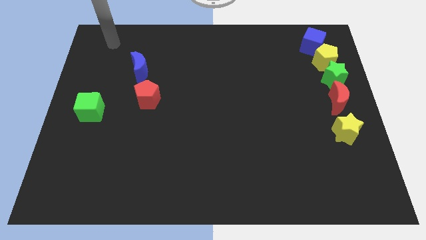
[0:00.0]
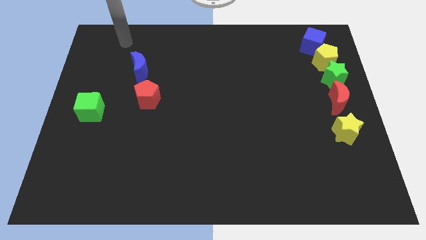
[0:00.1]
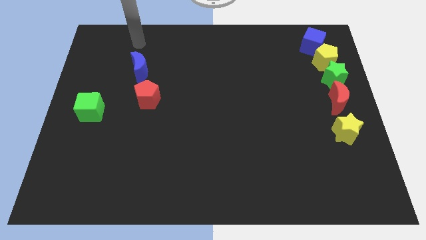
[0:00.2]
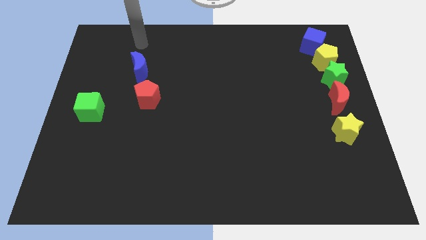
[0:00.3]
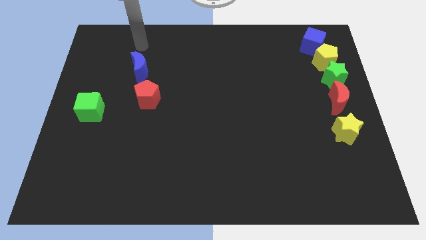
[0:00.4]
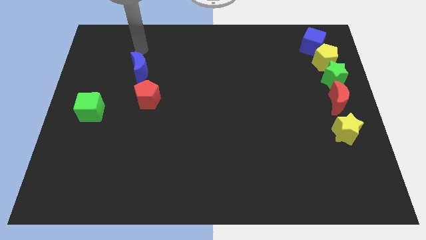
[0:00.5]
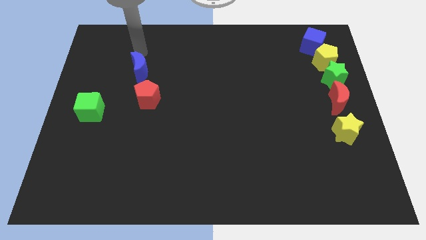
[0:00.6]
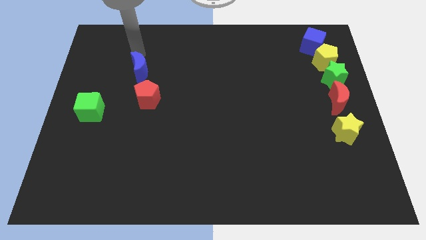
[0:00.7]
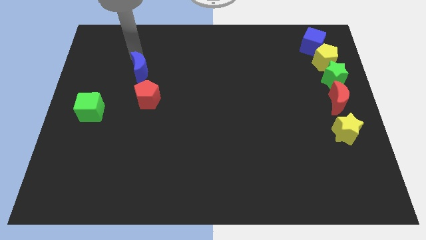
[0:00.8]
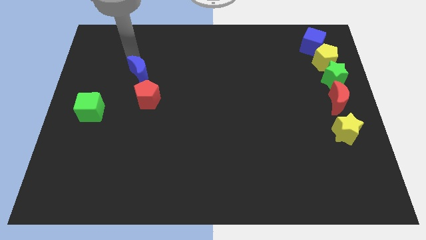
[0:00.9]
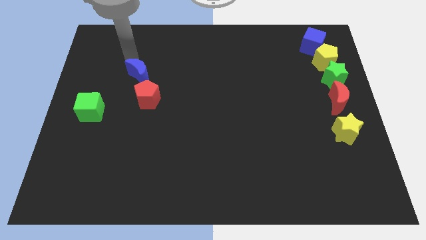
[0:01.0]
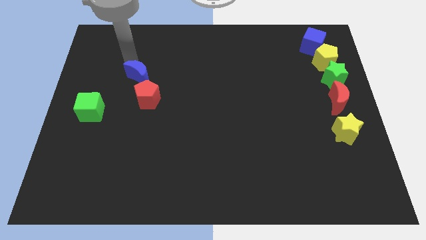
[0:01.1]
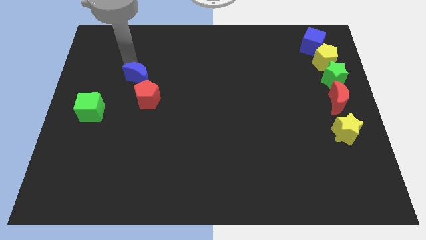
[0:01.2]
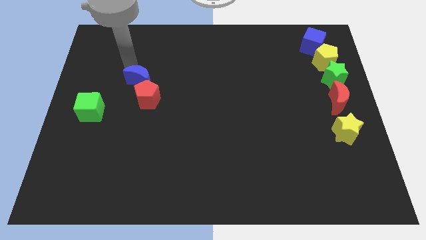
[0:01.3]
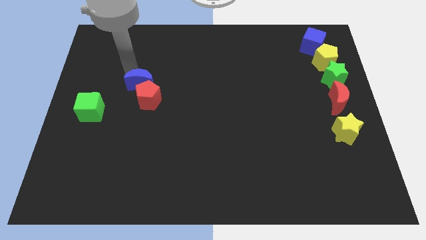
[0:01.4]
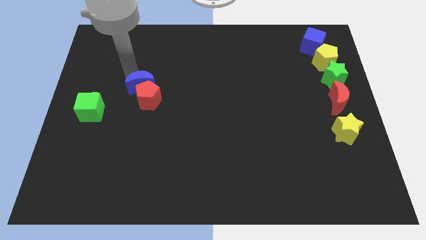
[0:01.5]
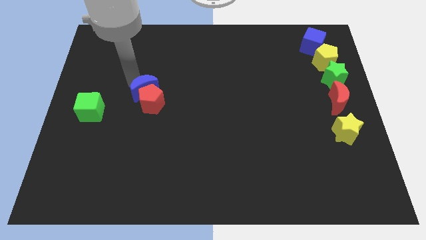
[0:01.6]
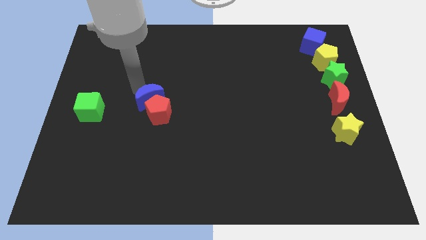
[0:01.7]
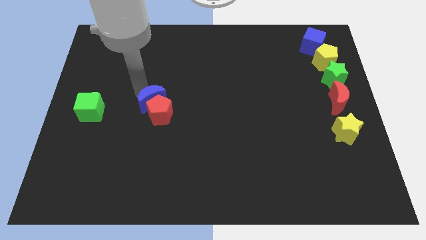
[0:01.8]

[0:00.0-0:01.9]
push the blue moon into the red pentagon

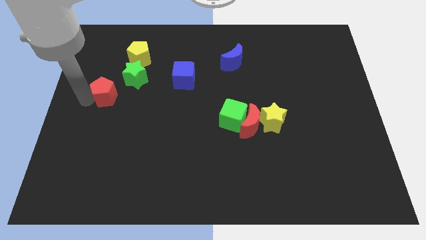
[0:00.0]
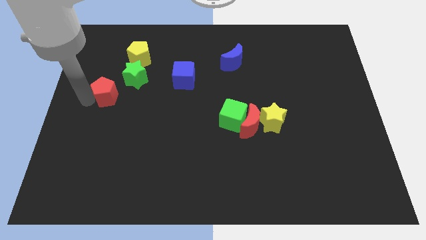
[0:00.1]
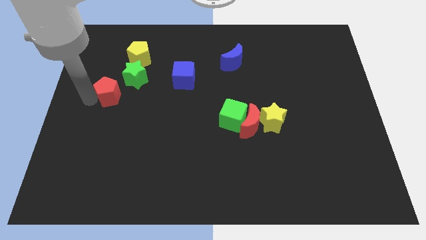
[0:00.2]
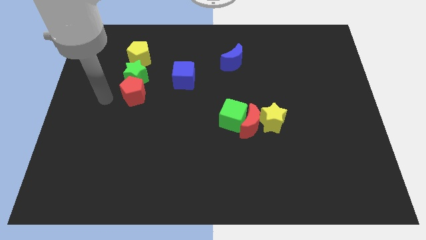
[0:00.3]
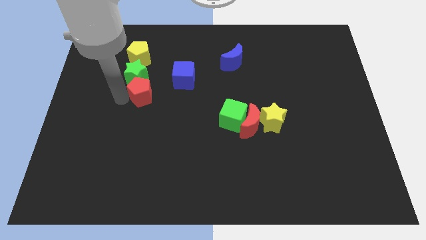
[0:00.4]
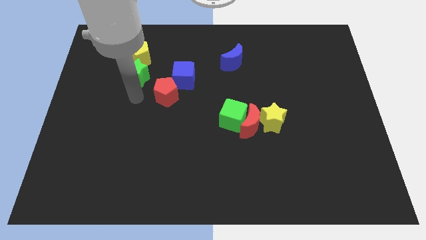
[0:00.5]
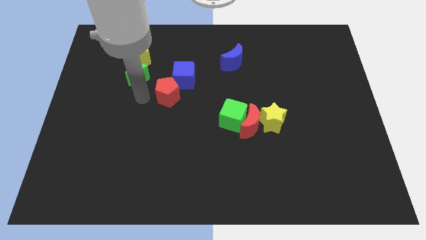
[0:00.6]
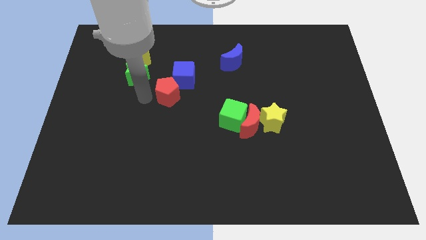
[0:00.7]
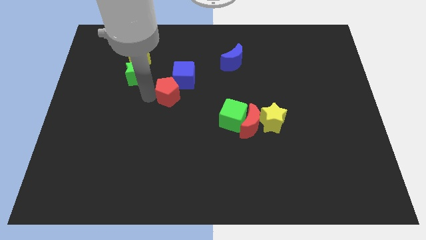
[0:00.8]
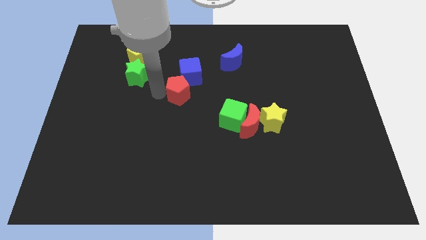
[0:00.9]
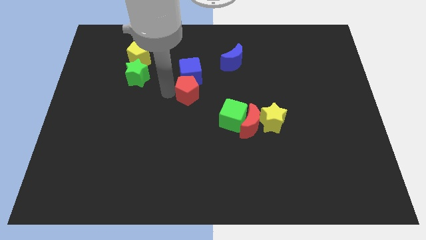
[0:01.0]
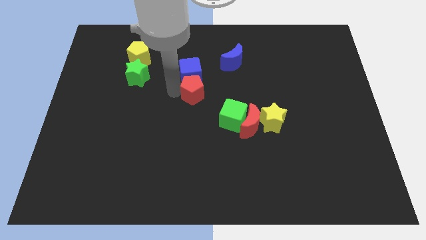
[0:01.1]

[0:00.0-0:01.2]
slide the red pentagon into the bottom of the blue cube

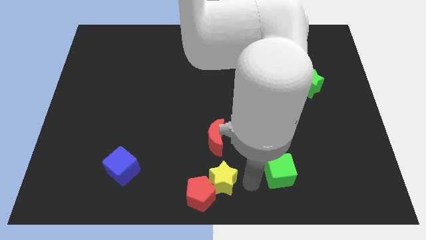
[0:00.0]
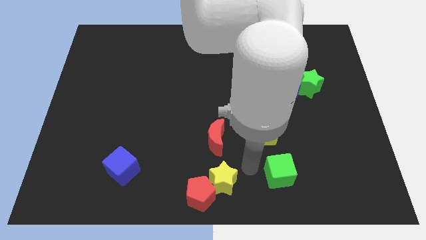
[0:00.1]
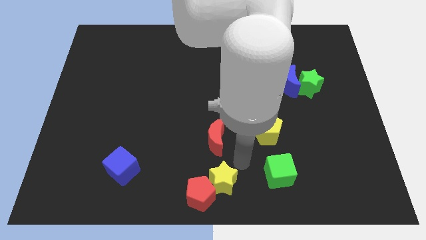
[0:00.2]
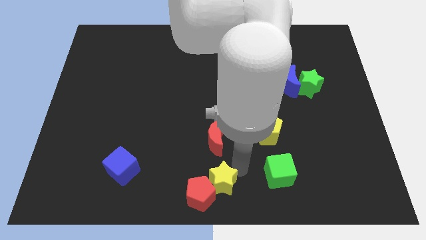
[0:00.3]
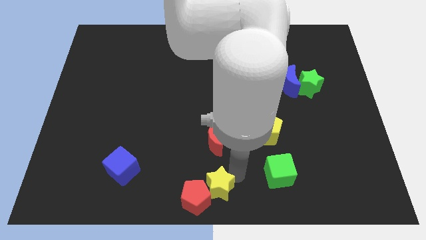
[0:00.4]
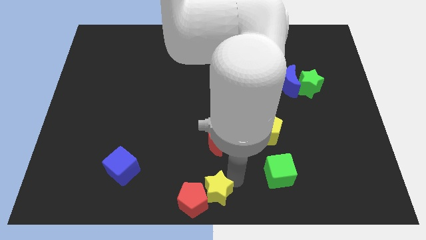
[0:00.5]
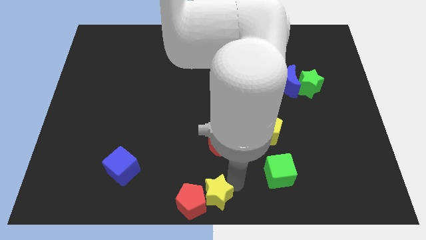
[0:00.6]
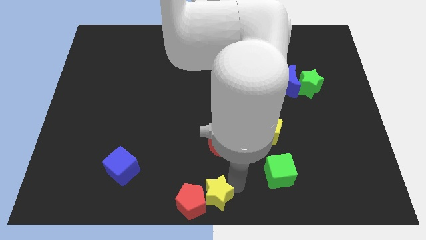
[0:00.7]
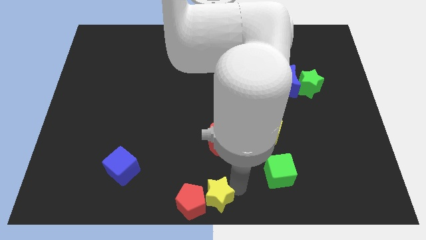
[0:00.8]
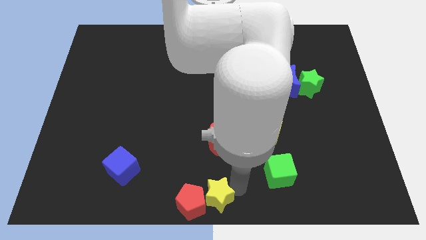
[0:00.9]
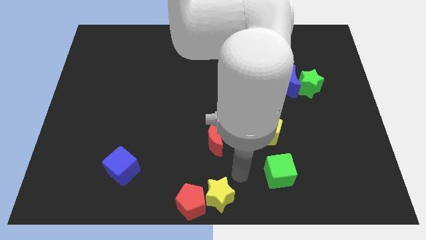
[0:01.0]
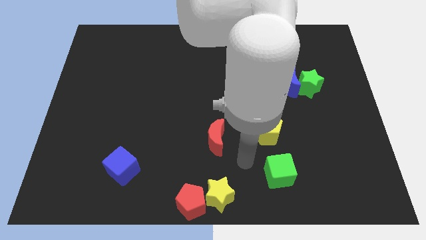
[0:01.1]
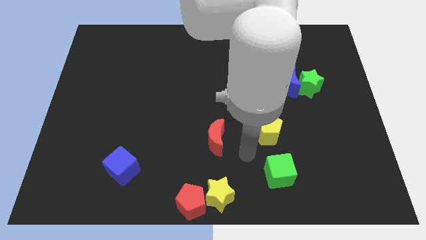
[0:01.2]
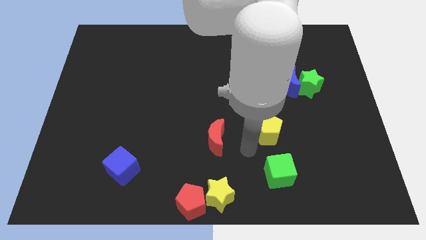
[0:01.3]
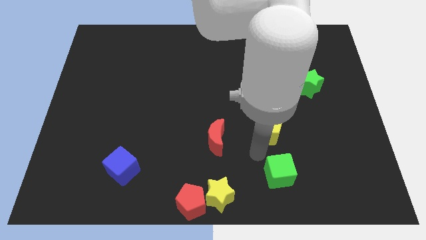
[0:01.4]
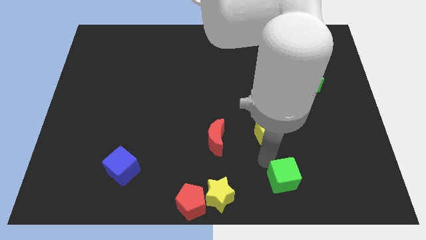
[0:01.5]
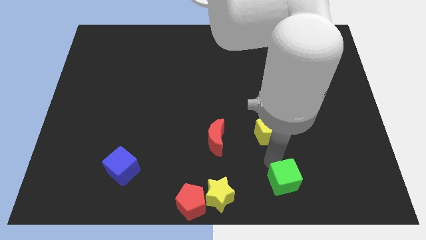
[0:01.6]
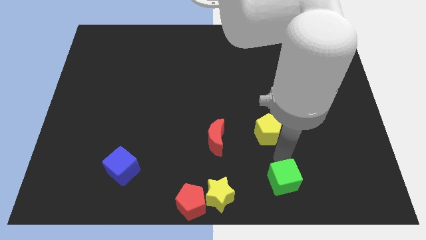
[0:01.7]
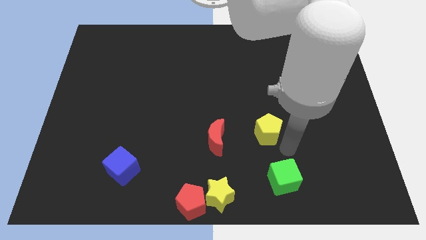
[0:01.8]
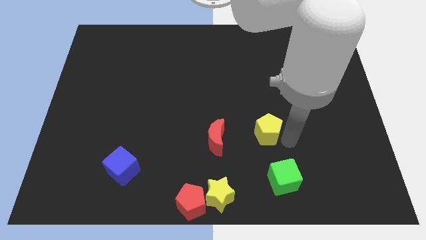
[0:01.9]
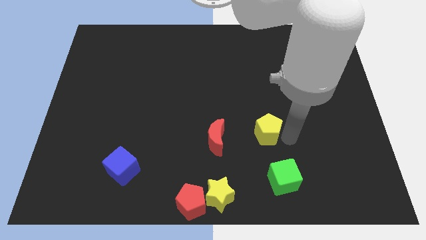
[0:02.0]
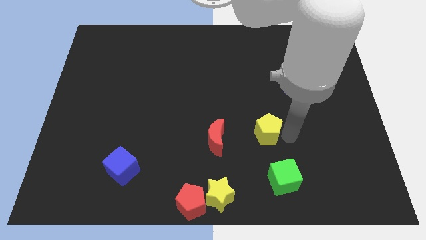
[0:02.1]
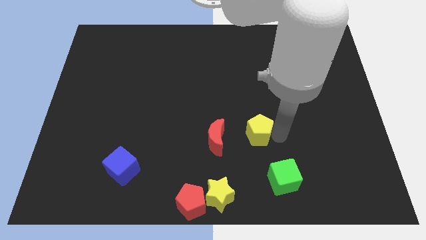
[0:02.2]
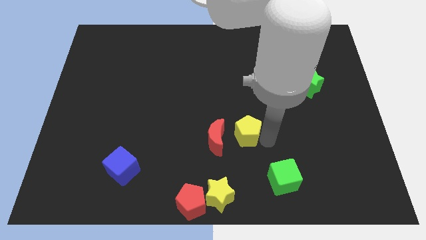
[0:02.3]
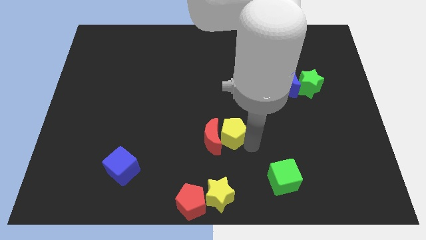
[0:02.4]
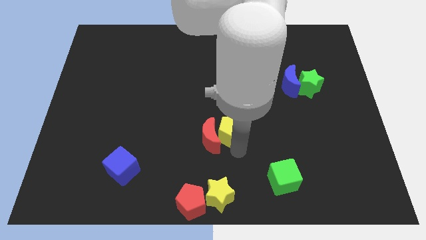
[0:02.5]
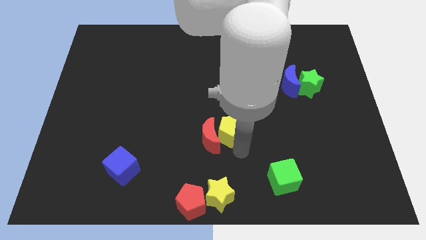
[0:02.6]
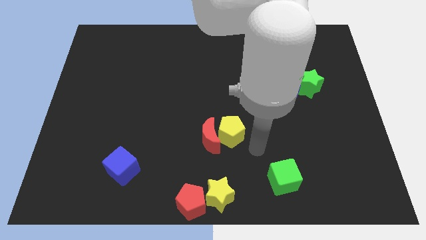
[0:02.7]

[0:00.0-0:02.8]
place yellow pentagon to the right red moon

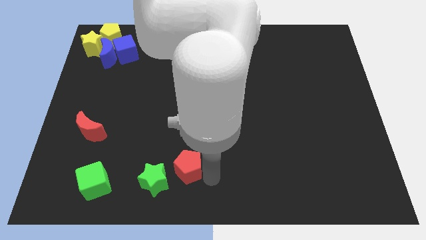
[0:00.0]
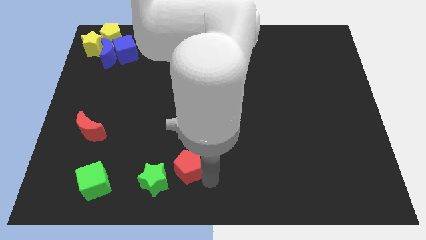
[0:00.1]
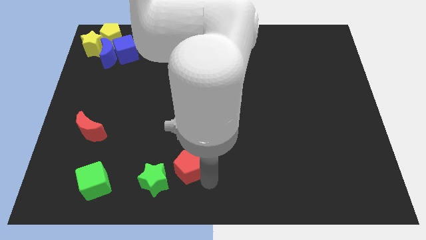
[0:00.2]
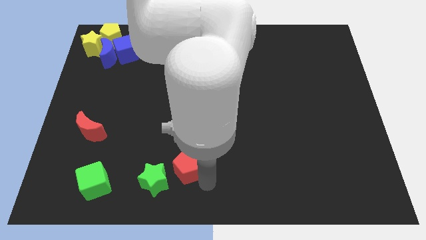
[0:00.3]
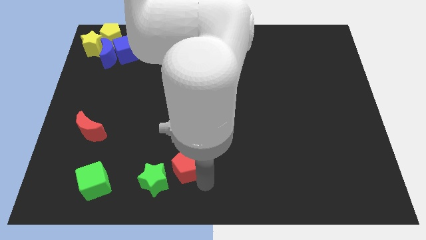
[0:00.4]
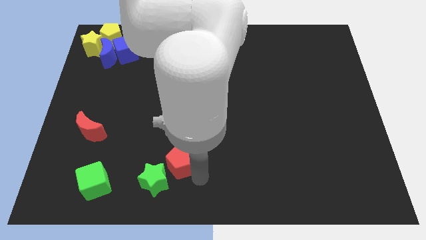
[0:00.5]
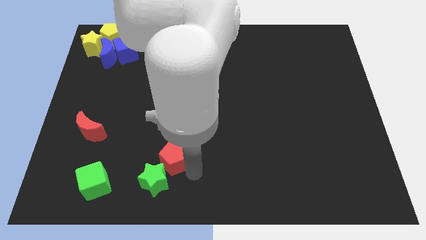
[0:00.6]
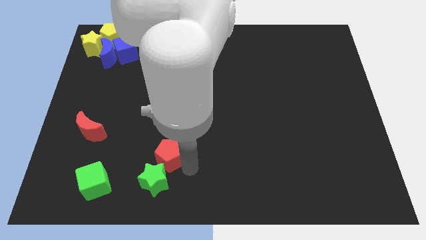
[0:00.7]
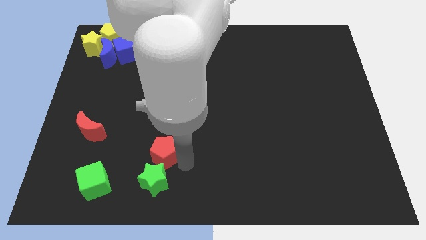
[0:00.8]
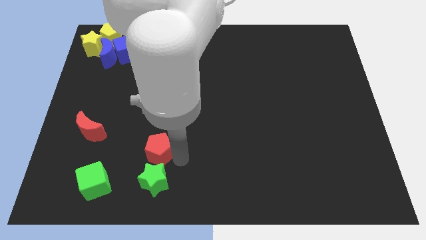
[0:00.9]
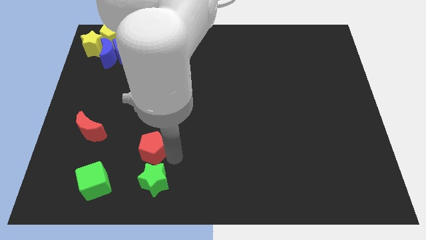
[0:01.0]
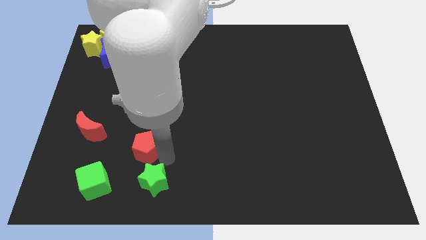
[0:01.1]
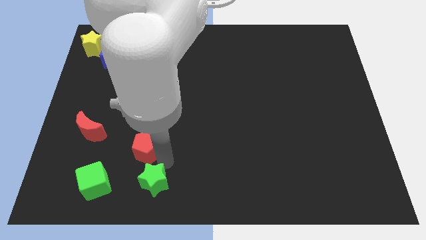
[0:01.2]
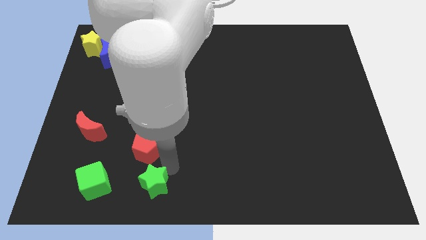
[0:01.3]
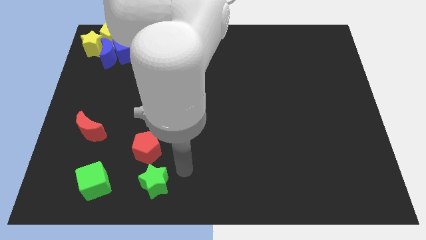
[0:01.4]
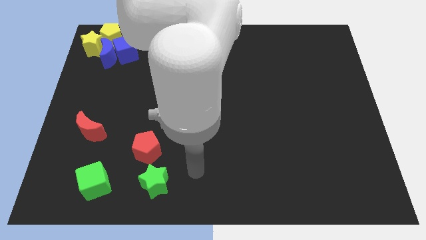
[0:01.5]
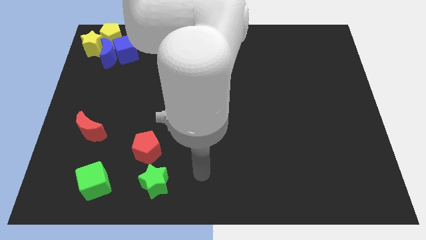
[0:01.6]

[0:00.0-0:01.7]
put the red pentagon above the green star

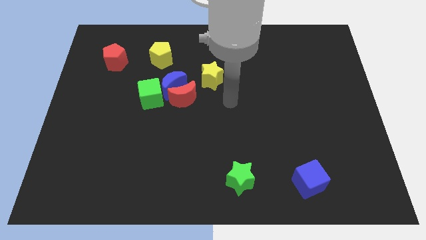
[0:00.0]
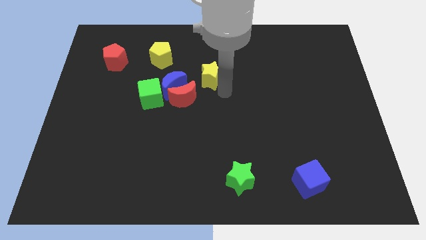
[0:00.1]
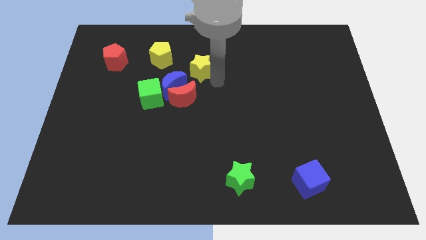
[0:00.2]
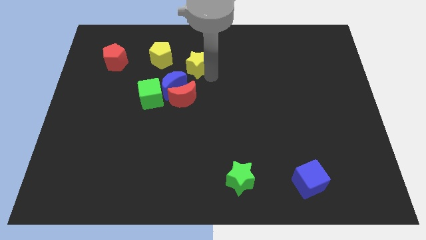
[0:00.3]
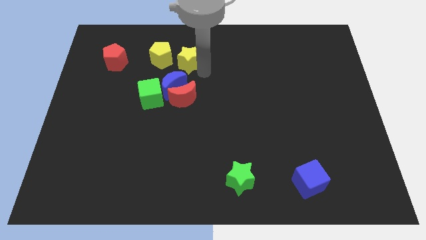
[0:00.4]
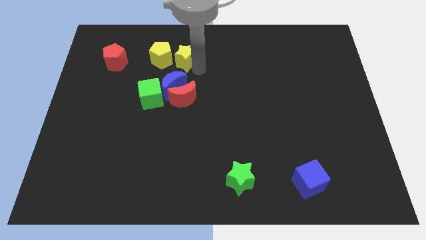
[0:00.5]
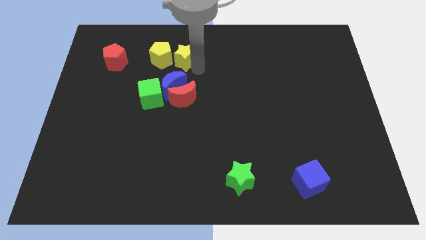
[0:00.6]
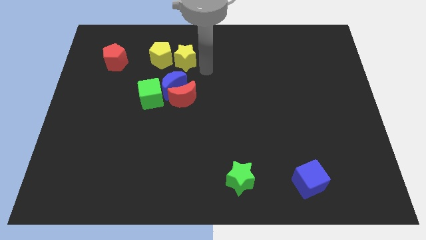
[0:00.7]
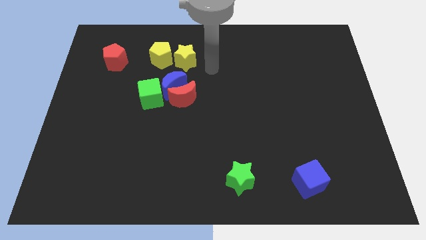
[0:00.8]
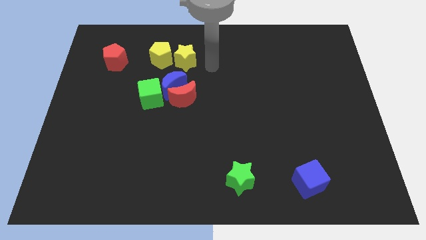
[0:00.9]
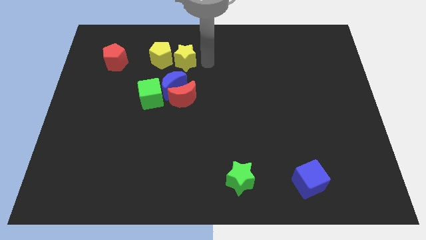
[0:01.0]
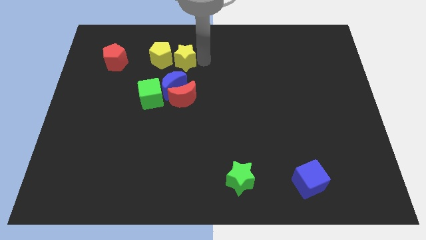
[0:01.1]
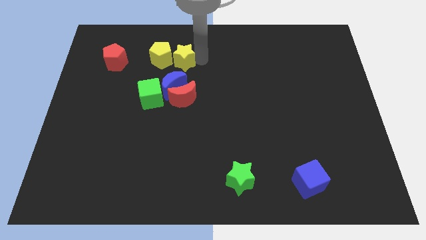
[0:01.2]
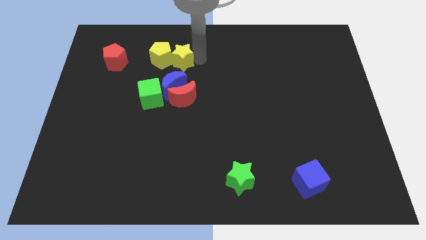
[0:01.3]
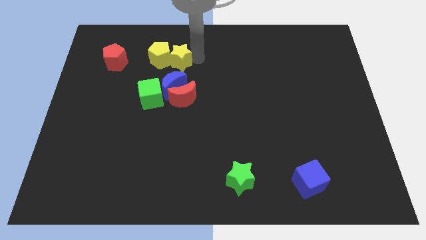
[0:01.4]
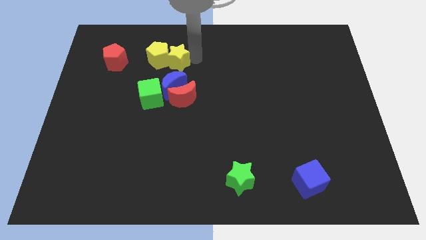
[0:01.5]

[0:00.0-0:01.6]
drag the yellow star into the right side of the yellow pentagon
